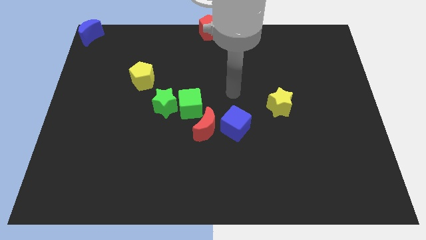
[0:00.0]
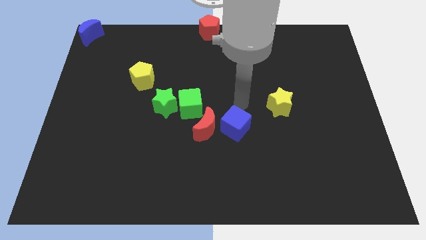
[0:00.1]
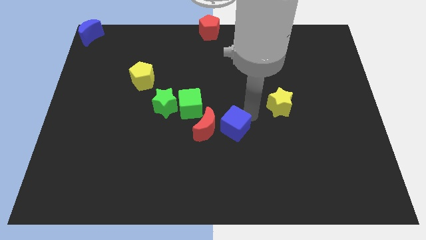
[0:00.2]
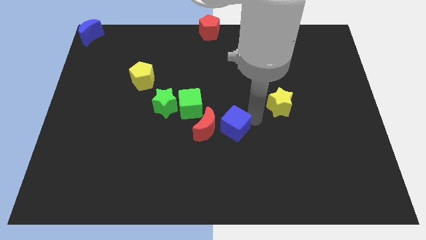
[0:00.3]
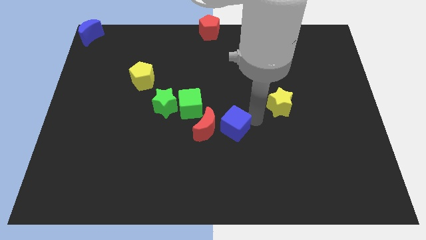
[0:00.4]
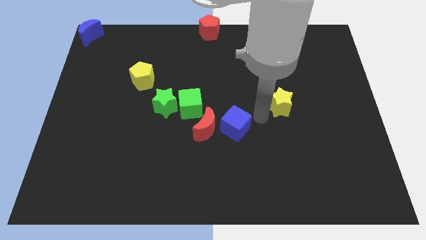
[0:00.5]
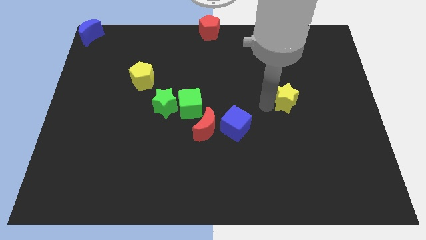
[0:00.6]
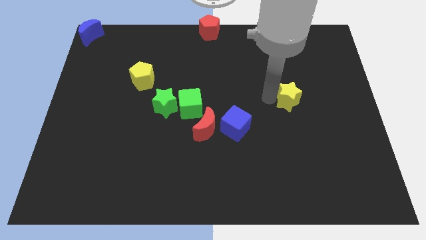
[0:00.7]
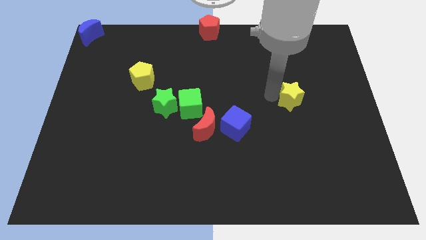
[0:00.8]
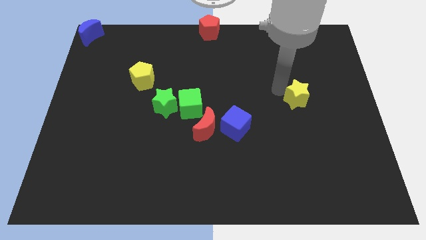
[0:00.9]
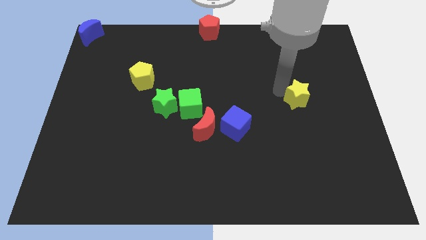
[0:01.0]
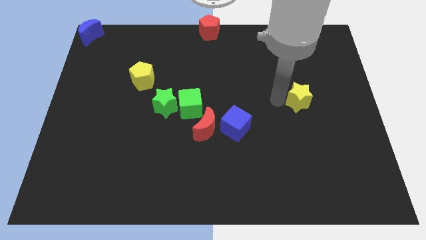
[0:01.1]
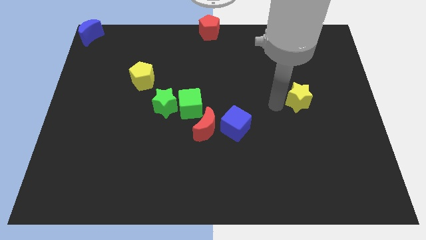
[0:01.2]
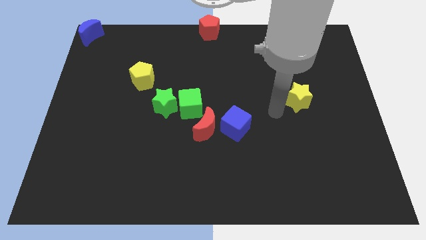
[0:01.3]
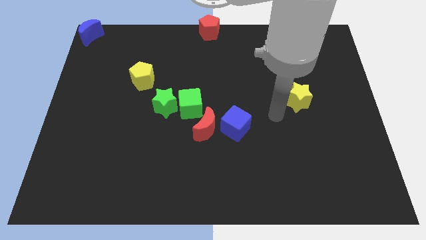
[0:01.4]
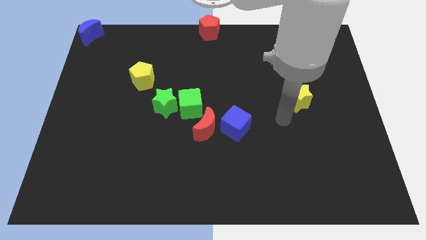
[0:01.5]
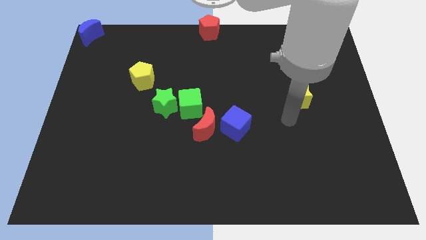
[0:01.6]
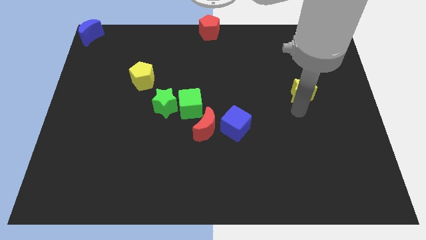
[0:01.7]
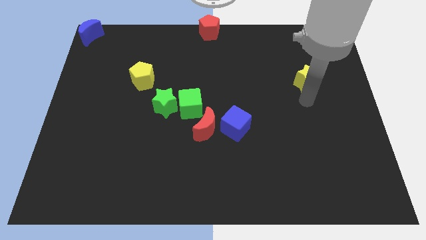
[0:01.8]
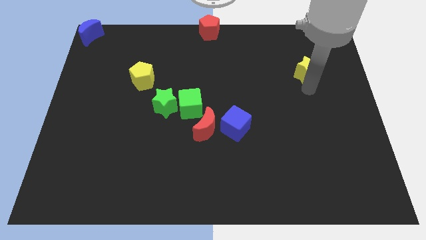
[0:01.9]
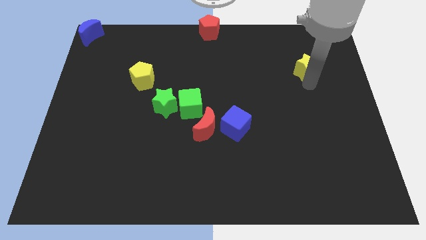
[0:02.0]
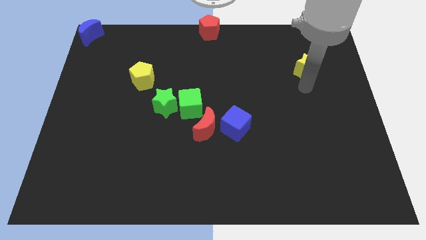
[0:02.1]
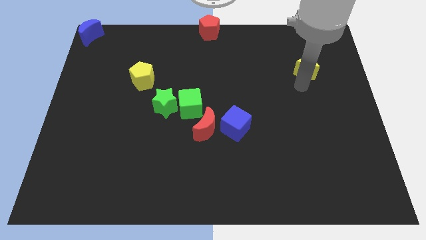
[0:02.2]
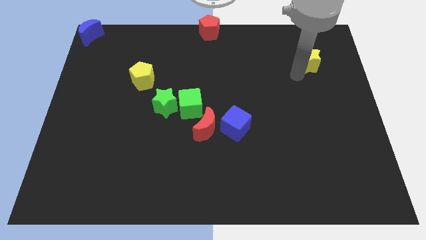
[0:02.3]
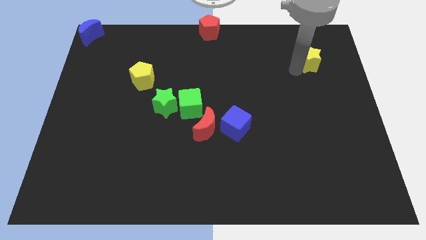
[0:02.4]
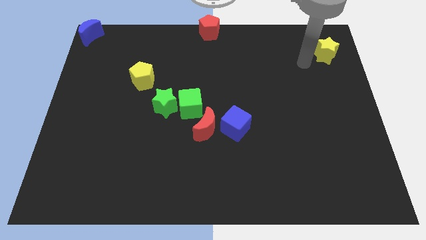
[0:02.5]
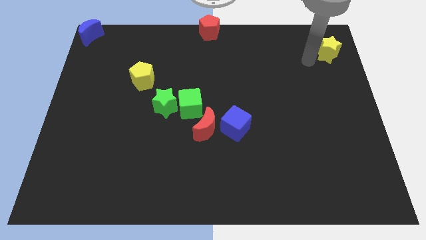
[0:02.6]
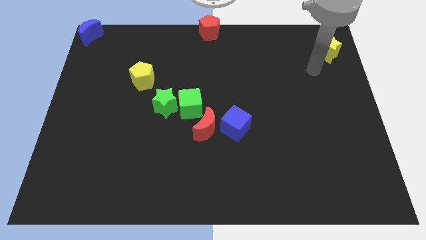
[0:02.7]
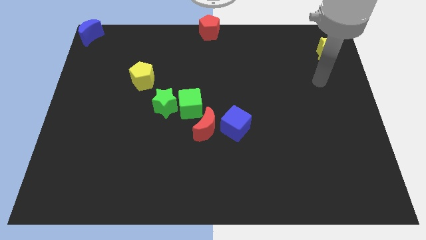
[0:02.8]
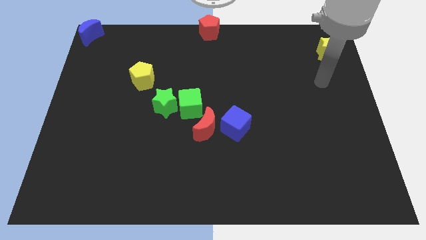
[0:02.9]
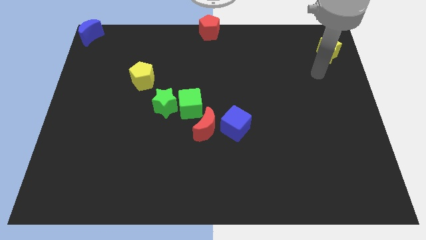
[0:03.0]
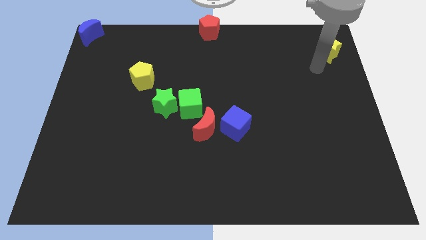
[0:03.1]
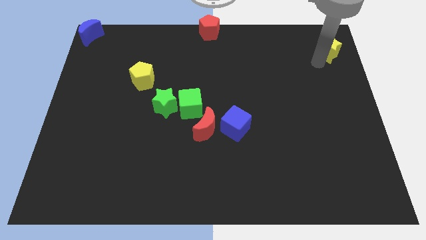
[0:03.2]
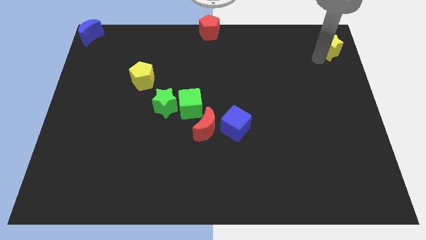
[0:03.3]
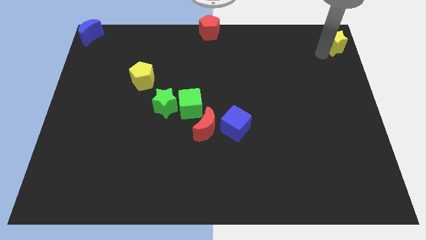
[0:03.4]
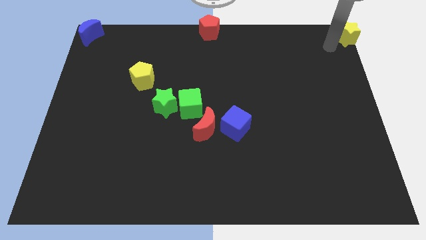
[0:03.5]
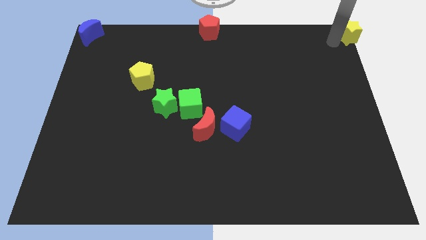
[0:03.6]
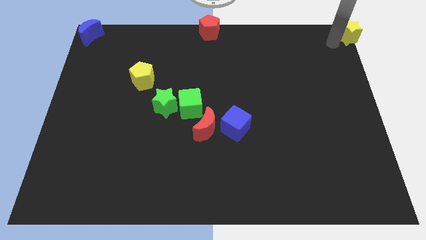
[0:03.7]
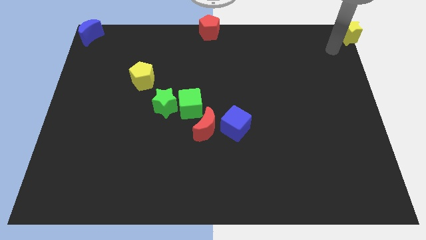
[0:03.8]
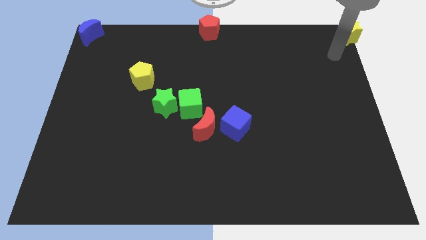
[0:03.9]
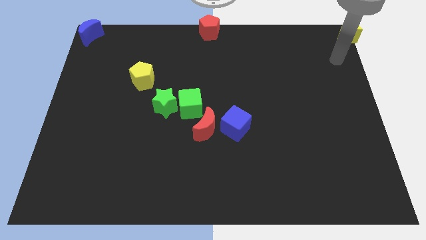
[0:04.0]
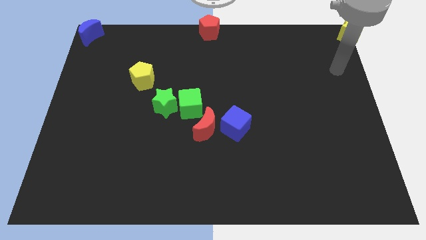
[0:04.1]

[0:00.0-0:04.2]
move the yellow star diagonally to blue cube

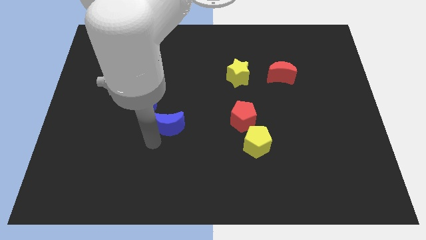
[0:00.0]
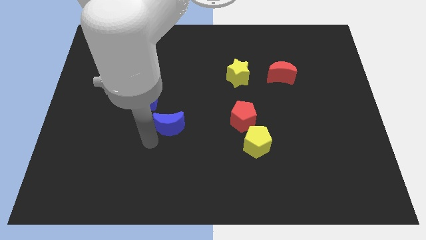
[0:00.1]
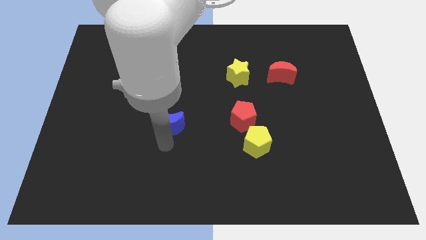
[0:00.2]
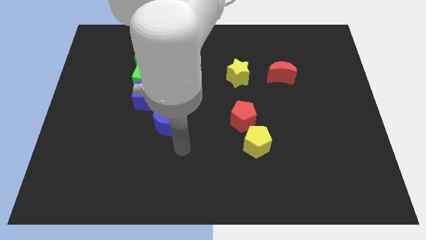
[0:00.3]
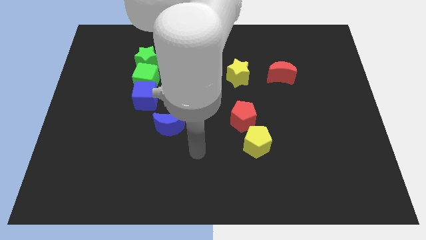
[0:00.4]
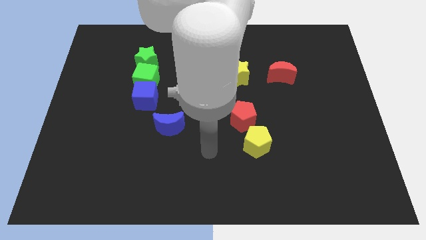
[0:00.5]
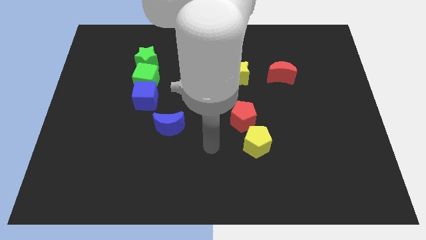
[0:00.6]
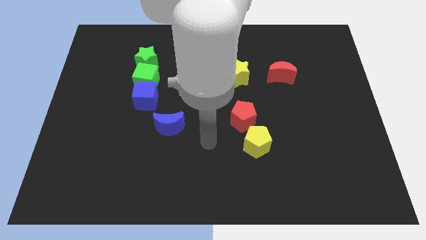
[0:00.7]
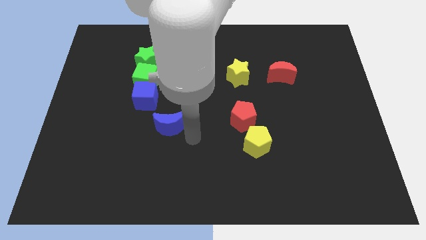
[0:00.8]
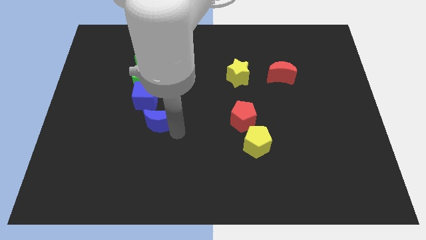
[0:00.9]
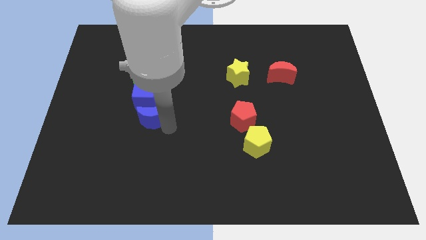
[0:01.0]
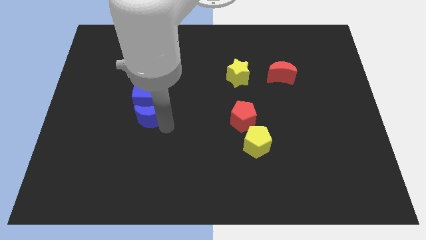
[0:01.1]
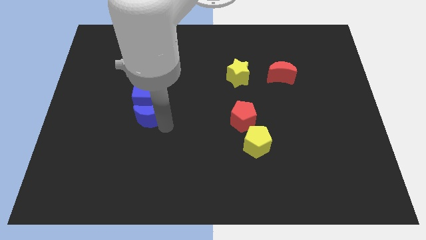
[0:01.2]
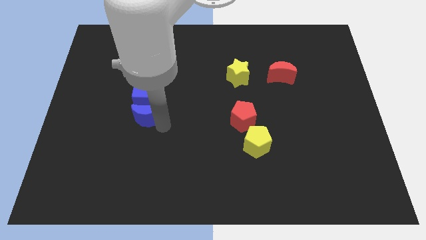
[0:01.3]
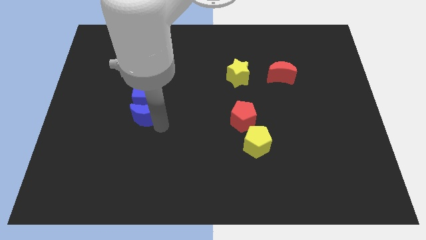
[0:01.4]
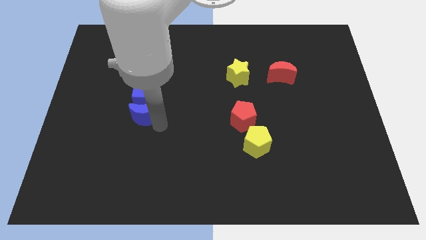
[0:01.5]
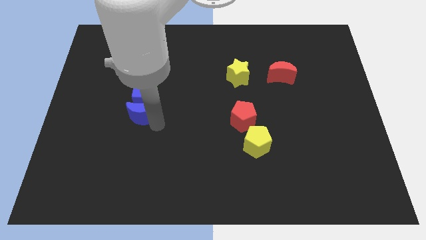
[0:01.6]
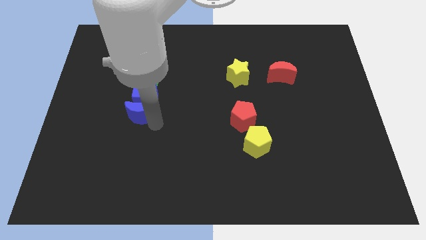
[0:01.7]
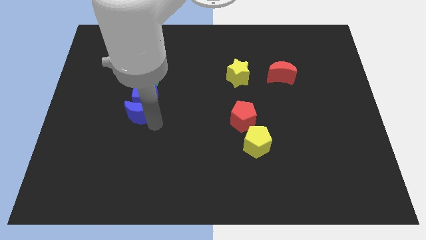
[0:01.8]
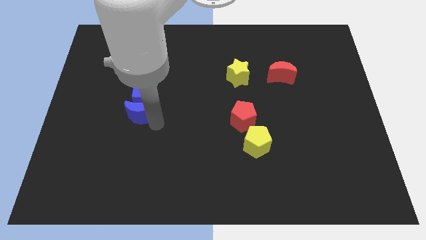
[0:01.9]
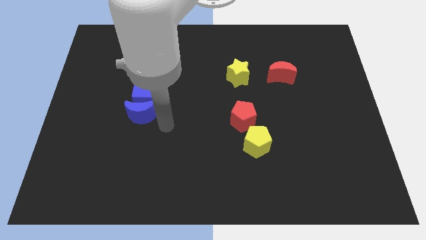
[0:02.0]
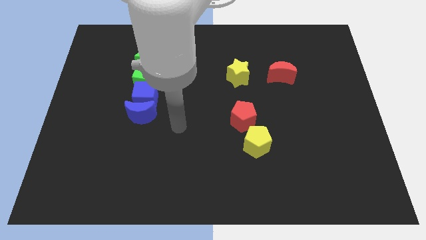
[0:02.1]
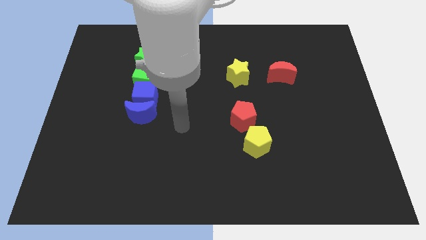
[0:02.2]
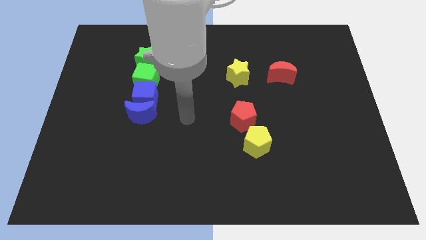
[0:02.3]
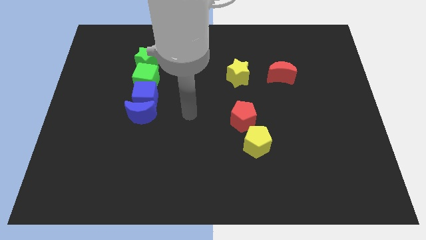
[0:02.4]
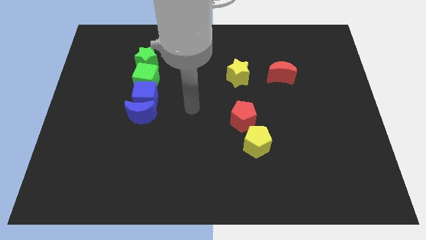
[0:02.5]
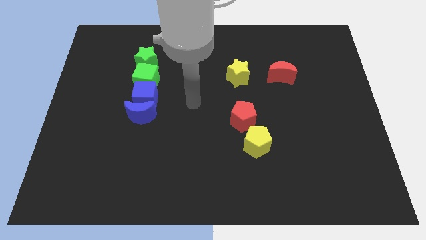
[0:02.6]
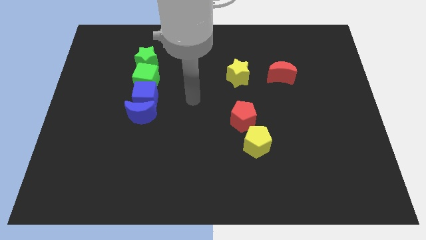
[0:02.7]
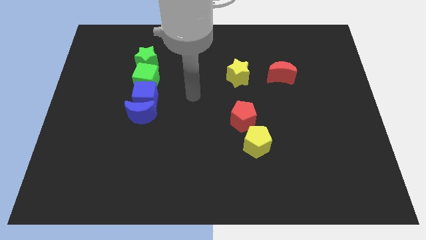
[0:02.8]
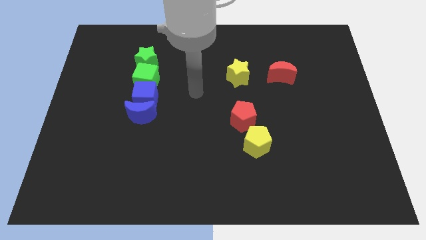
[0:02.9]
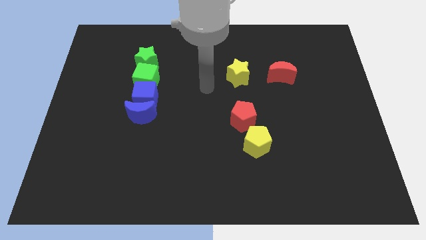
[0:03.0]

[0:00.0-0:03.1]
place the blue moon at the bottom of the blue cube

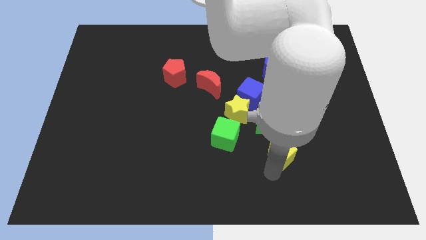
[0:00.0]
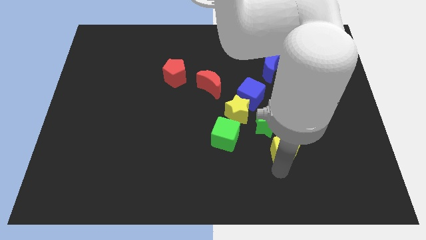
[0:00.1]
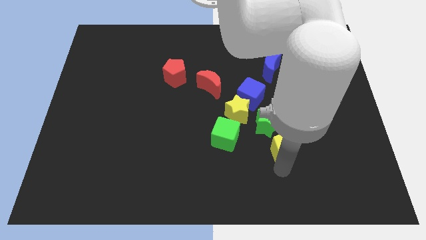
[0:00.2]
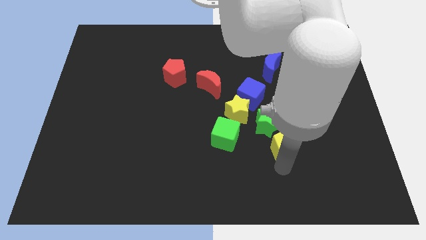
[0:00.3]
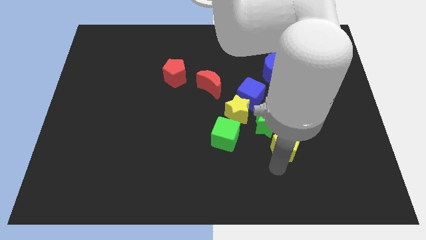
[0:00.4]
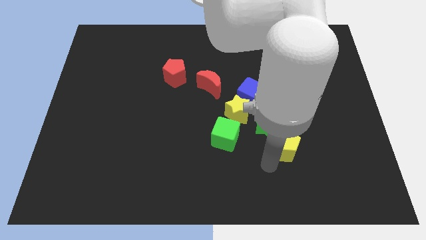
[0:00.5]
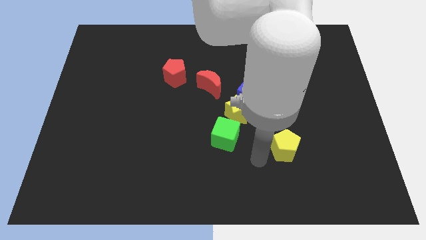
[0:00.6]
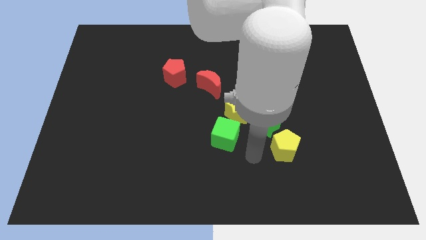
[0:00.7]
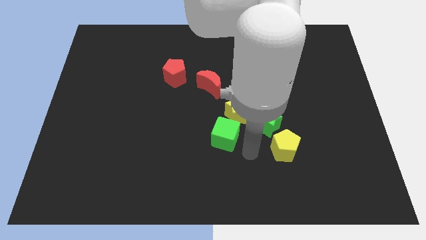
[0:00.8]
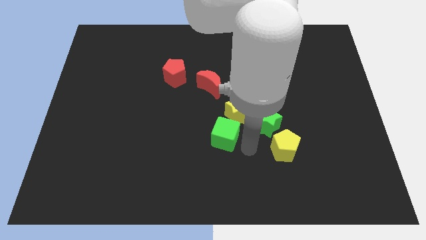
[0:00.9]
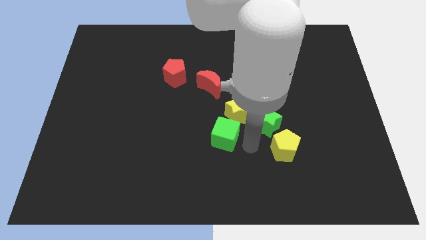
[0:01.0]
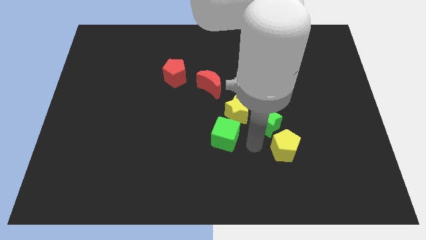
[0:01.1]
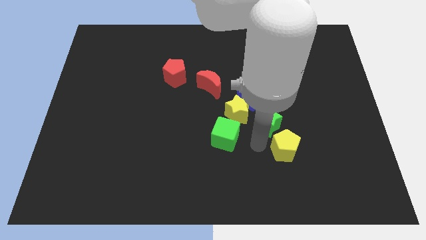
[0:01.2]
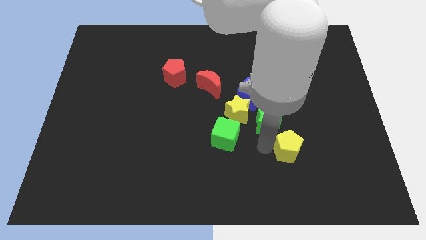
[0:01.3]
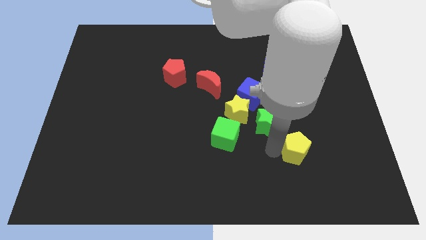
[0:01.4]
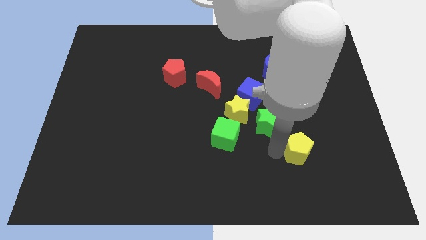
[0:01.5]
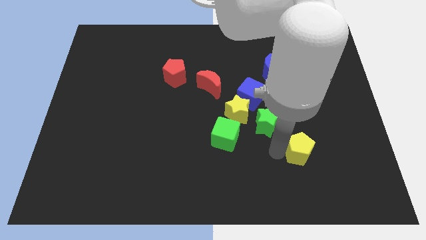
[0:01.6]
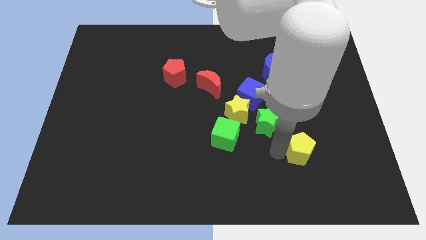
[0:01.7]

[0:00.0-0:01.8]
place the yellow pentagon diagonally on the bottom right side of the green star
